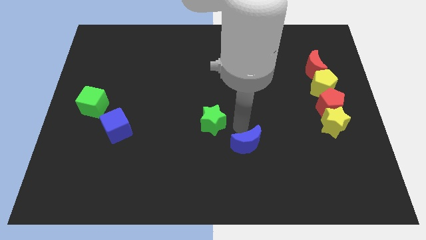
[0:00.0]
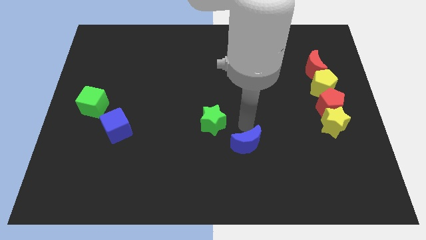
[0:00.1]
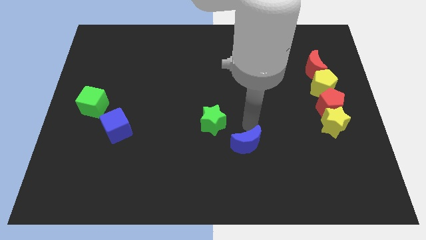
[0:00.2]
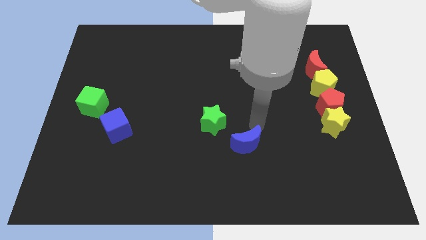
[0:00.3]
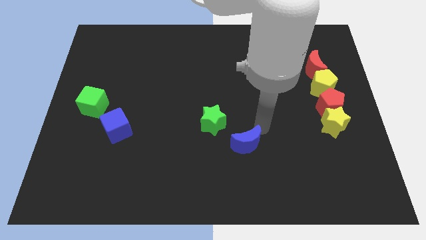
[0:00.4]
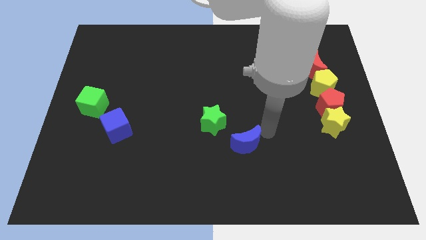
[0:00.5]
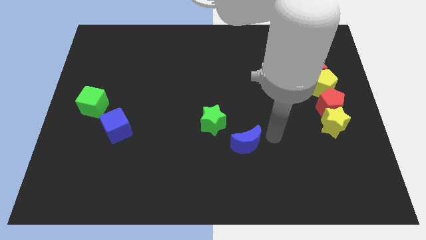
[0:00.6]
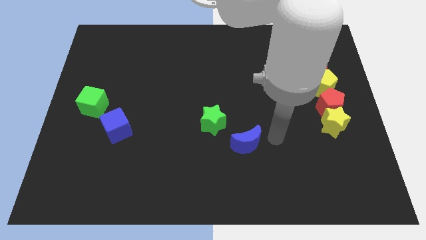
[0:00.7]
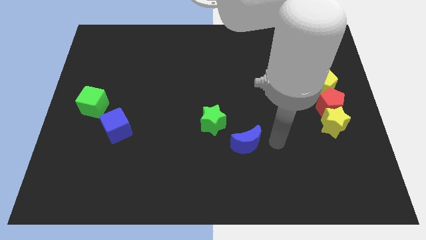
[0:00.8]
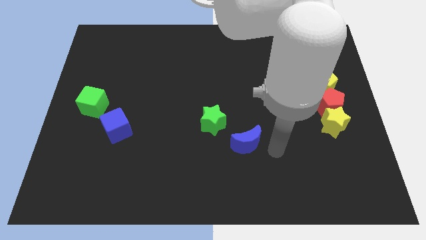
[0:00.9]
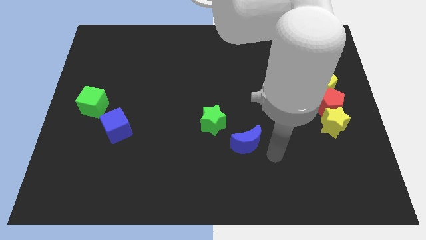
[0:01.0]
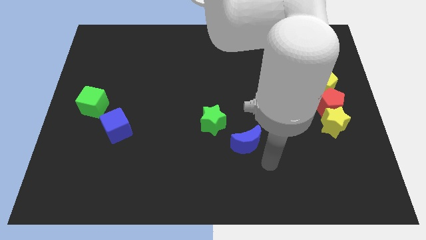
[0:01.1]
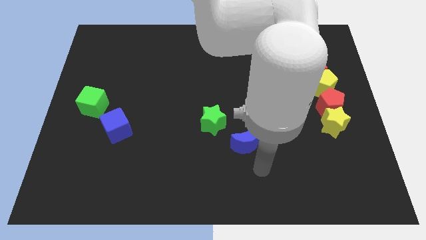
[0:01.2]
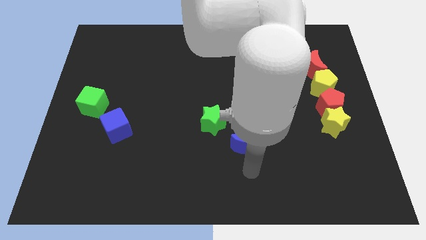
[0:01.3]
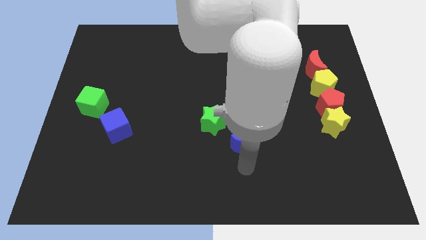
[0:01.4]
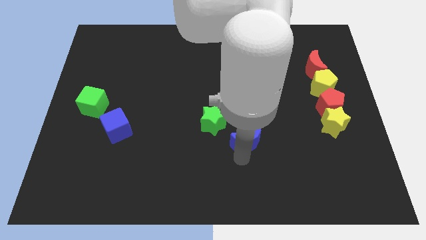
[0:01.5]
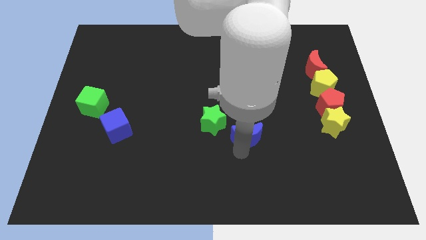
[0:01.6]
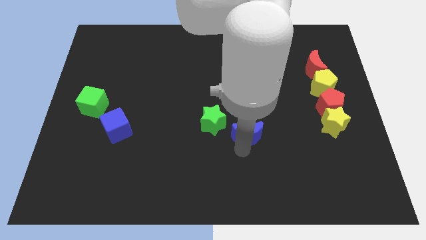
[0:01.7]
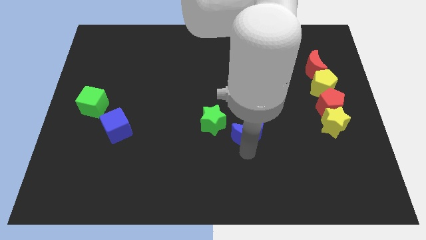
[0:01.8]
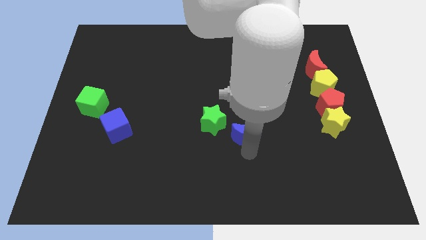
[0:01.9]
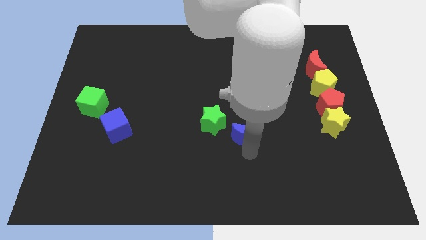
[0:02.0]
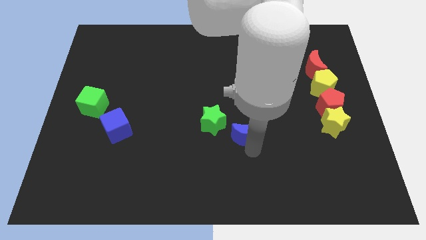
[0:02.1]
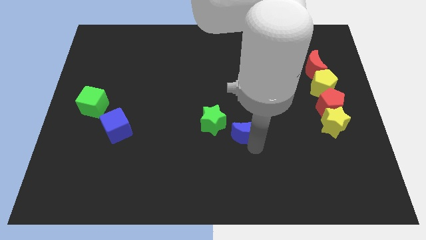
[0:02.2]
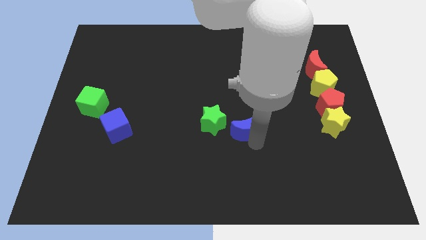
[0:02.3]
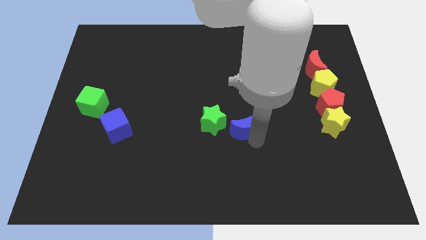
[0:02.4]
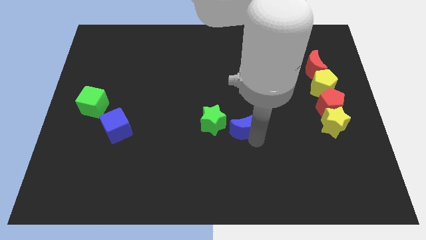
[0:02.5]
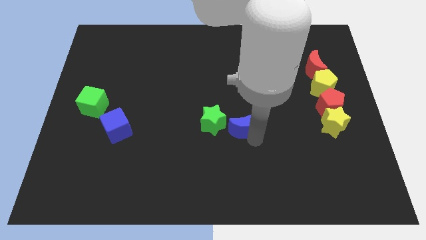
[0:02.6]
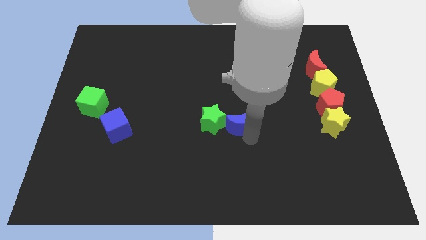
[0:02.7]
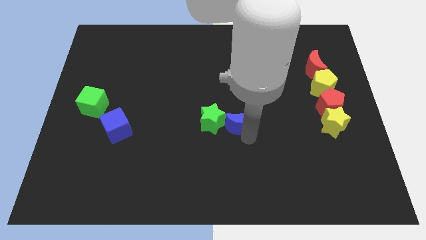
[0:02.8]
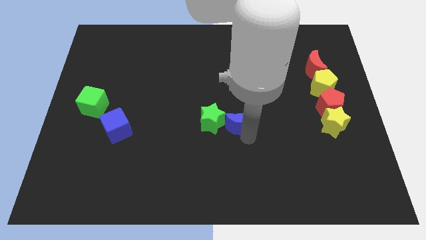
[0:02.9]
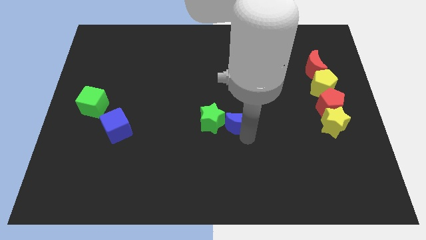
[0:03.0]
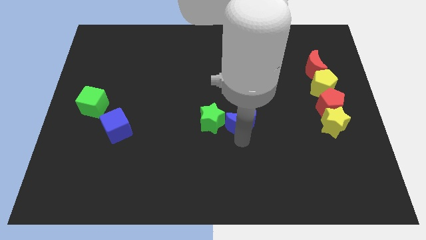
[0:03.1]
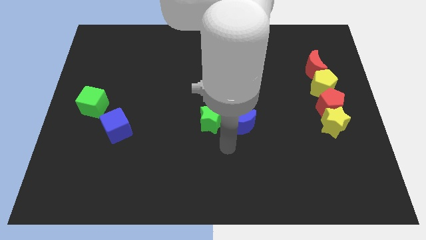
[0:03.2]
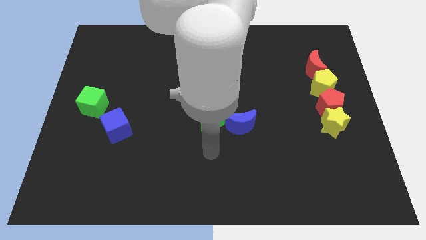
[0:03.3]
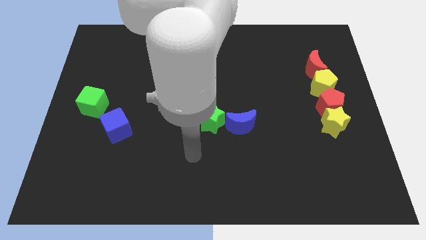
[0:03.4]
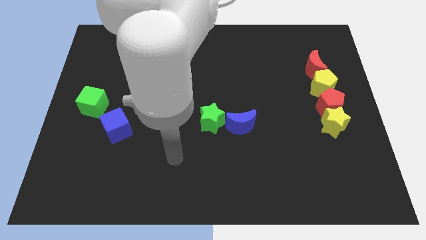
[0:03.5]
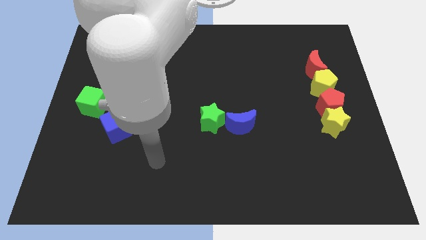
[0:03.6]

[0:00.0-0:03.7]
move the blue moon to the right side of the green star

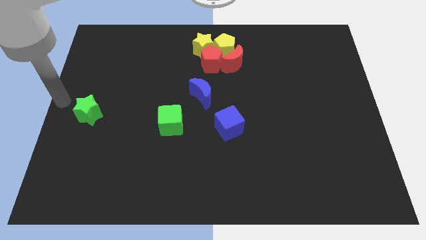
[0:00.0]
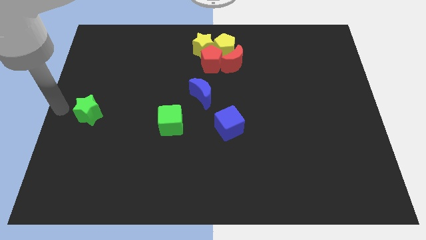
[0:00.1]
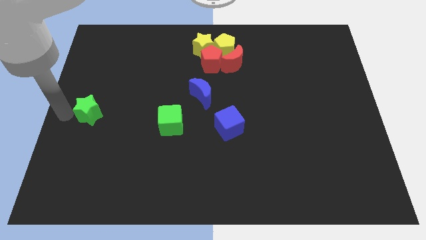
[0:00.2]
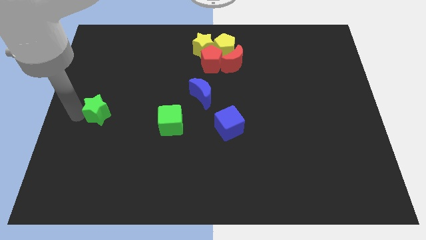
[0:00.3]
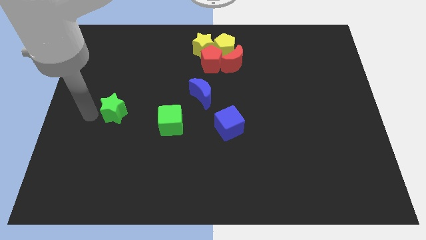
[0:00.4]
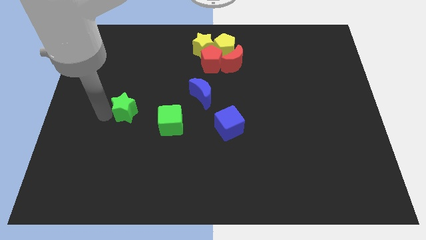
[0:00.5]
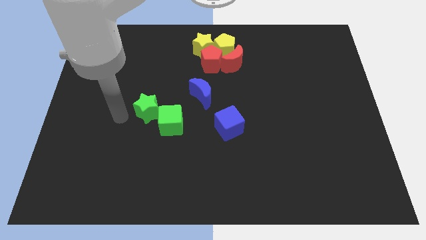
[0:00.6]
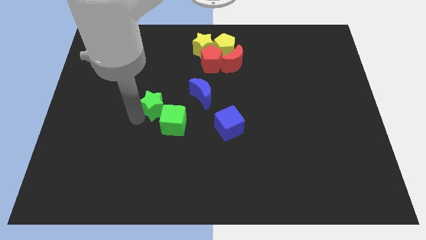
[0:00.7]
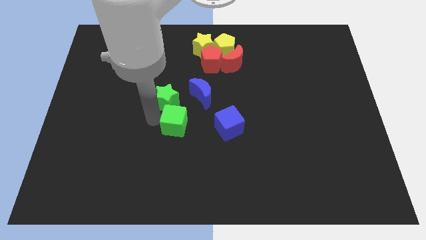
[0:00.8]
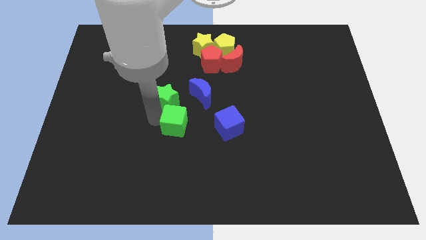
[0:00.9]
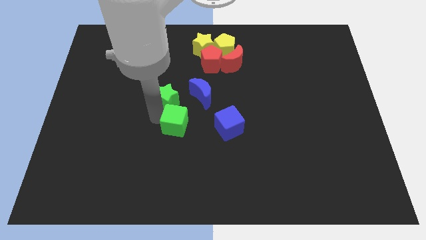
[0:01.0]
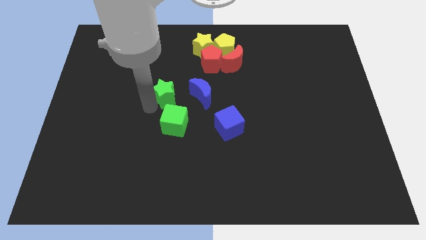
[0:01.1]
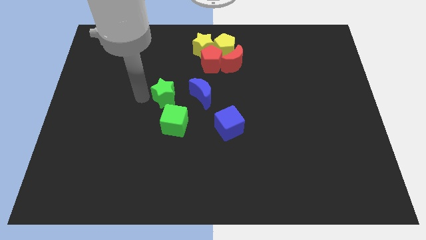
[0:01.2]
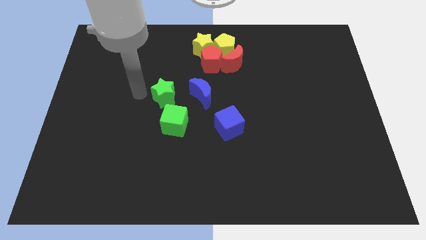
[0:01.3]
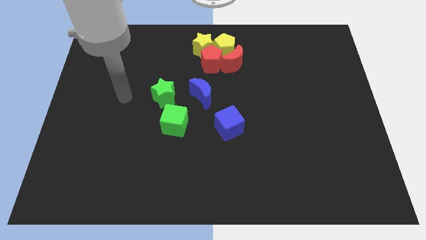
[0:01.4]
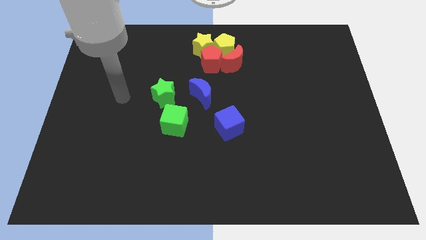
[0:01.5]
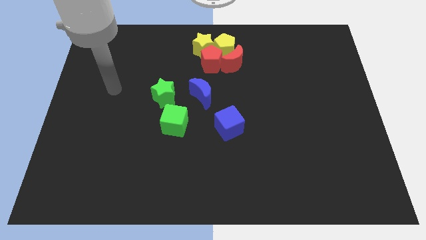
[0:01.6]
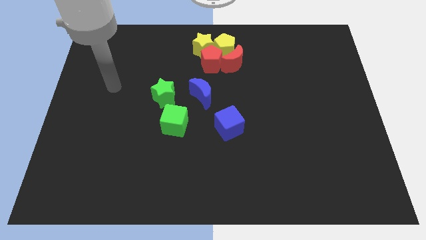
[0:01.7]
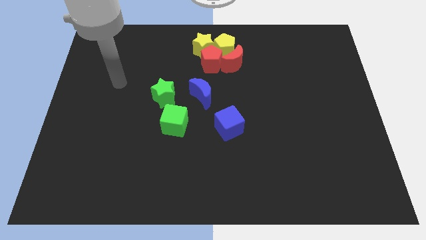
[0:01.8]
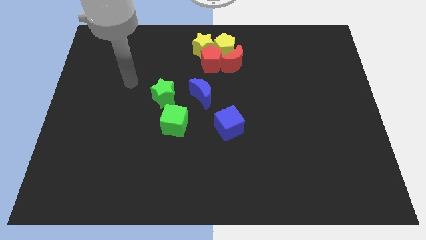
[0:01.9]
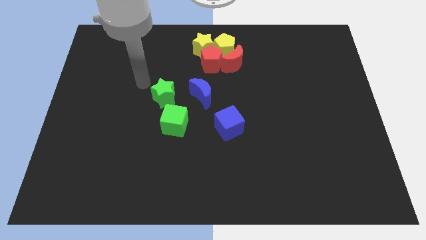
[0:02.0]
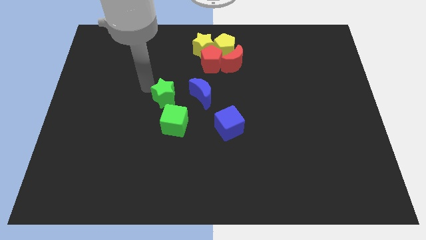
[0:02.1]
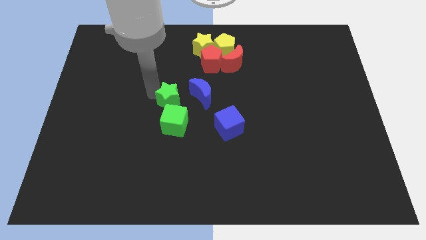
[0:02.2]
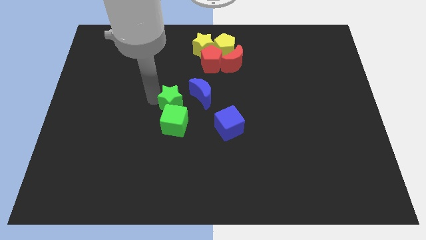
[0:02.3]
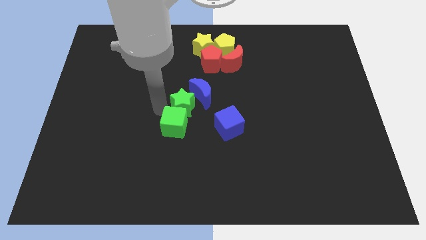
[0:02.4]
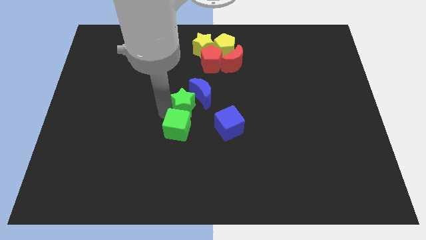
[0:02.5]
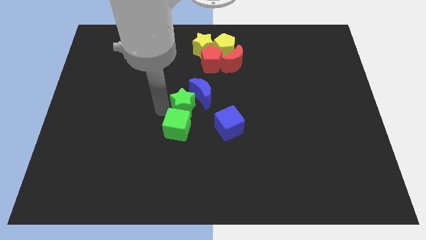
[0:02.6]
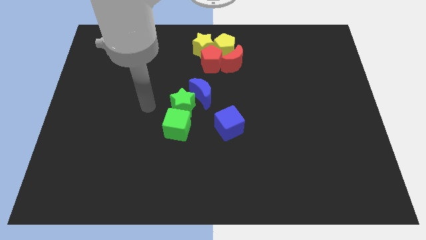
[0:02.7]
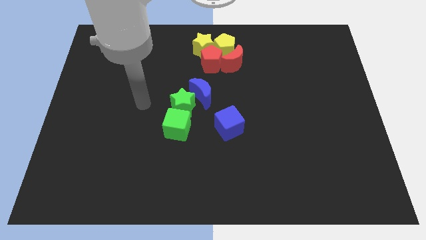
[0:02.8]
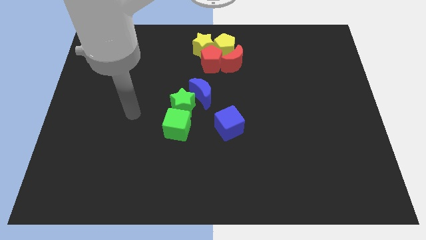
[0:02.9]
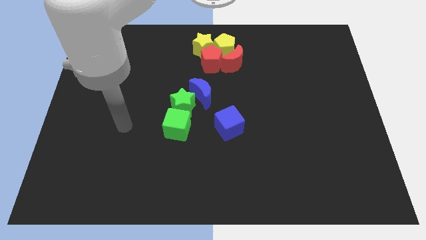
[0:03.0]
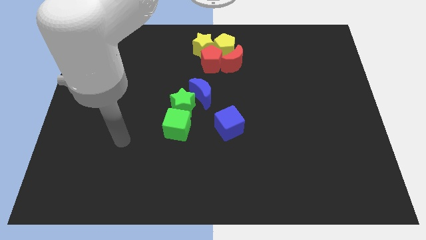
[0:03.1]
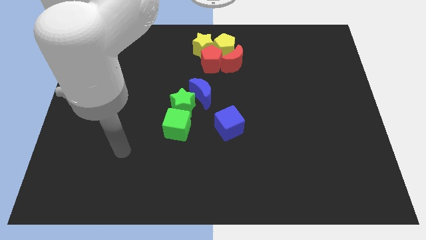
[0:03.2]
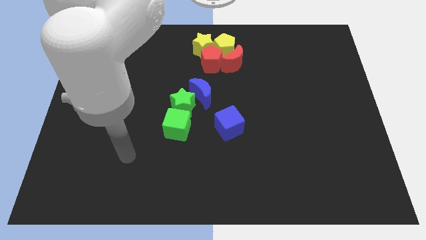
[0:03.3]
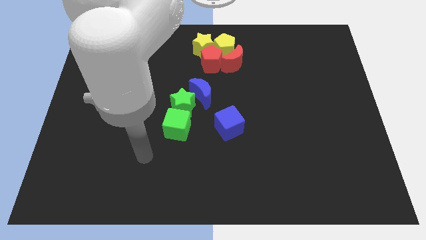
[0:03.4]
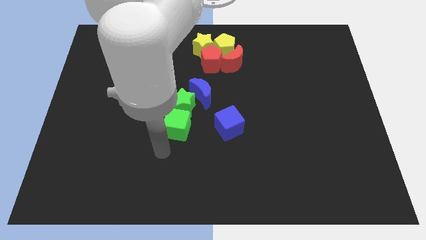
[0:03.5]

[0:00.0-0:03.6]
move green star to the top of green cube

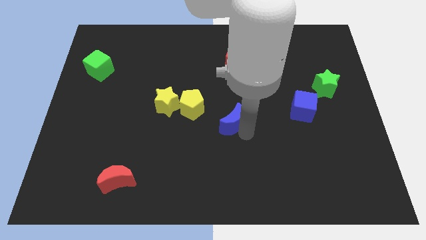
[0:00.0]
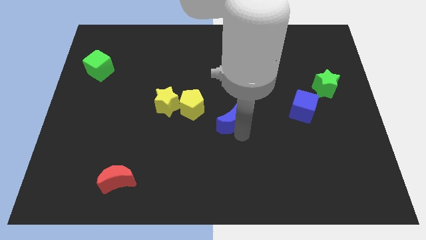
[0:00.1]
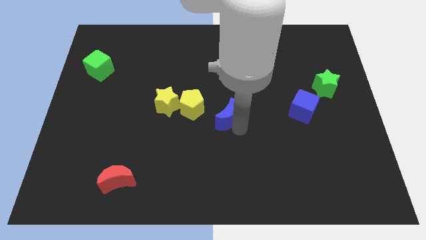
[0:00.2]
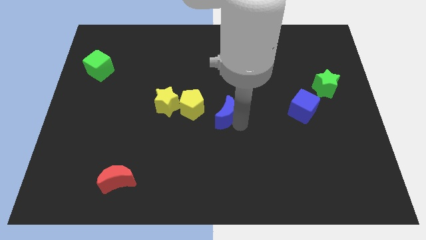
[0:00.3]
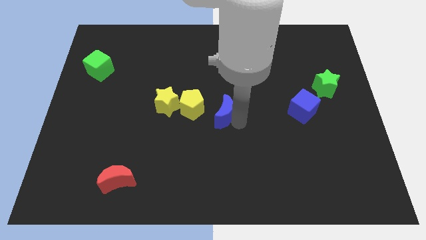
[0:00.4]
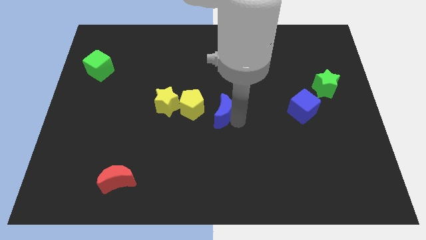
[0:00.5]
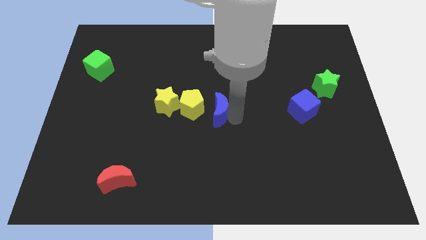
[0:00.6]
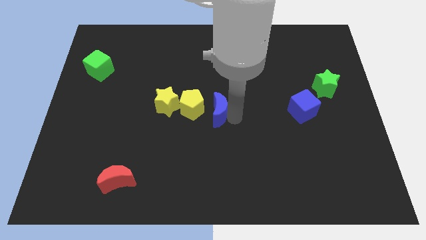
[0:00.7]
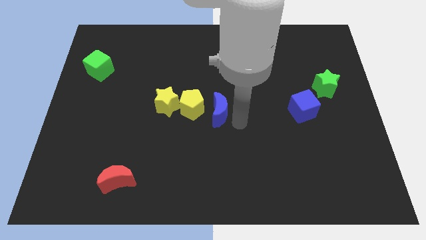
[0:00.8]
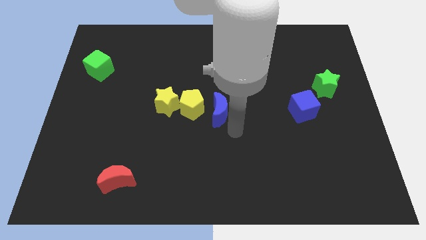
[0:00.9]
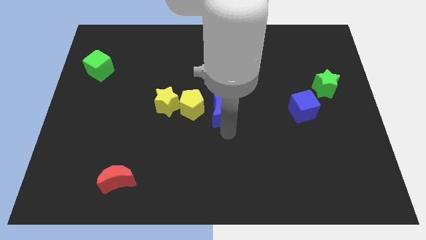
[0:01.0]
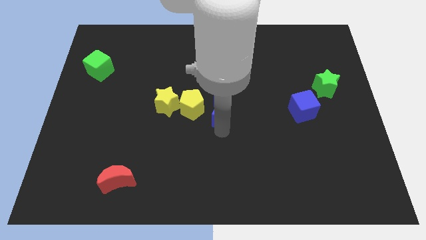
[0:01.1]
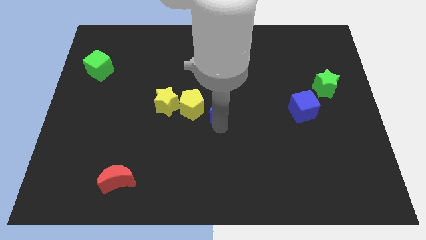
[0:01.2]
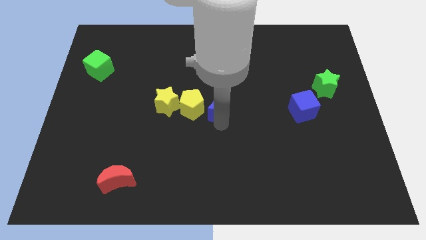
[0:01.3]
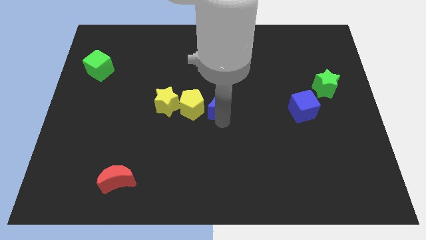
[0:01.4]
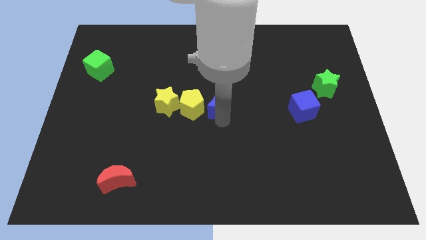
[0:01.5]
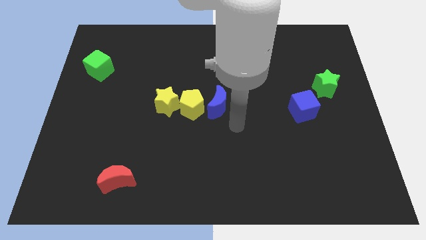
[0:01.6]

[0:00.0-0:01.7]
push the blue crescent to the right of the yellow pentagon

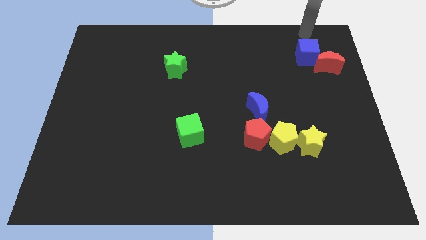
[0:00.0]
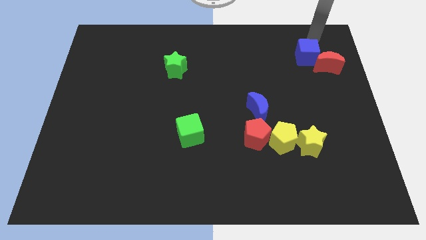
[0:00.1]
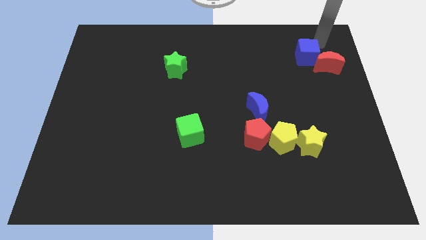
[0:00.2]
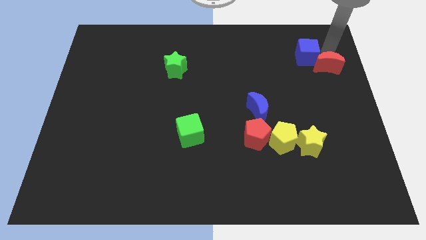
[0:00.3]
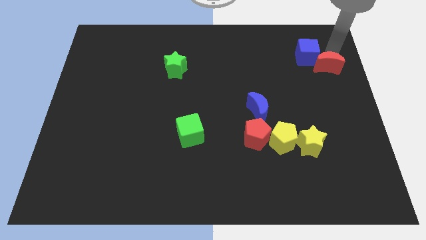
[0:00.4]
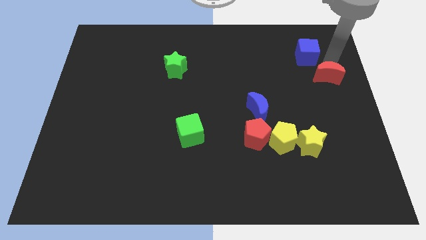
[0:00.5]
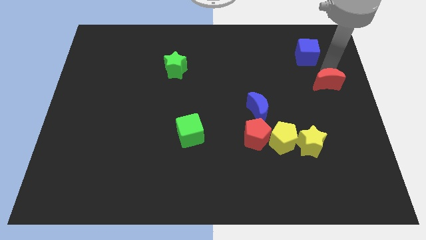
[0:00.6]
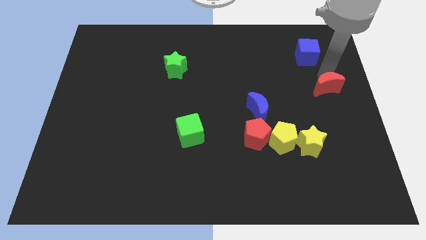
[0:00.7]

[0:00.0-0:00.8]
move the red crescent to the bottom of the board
